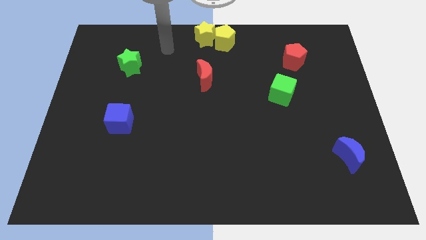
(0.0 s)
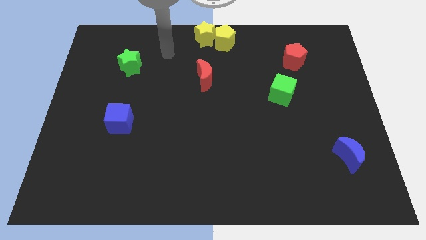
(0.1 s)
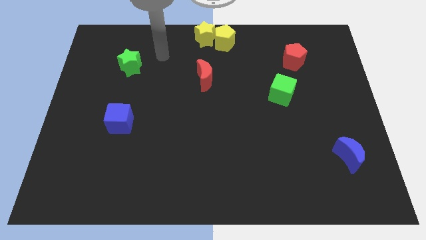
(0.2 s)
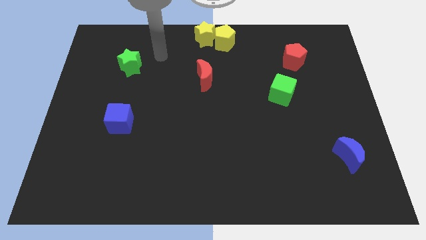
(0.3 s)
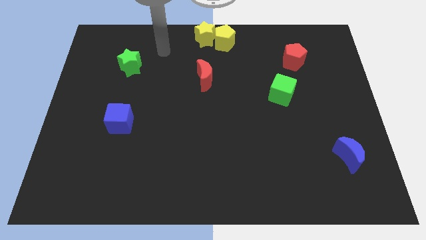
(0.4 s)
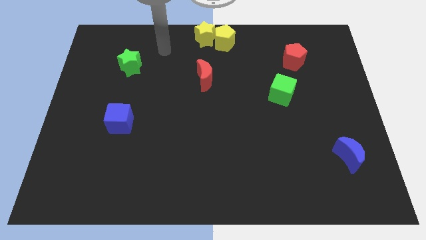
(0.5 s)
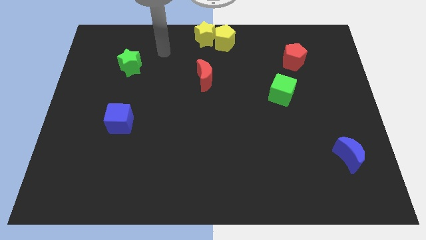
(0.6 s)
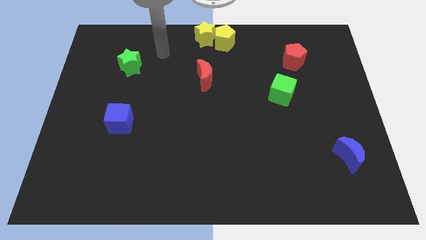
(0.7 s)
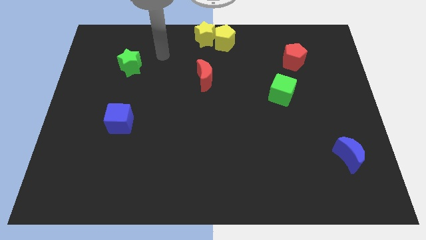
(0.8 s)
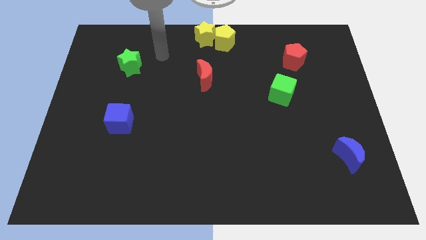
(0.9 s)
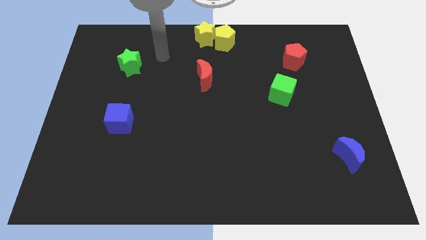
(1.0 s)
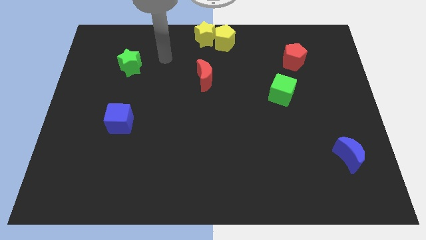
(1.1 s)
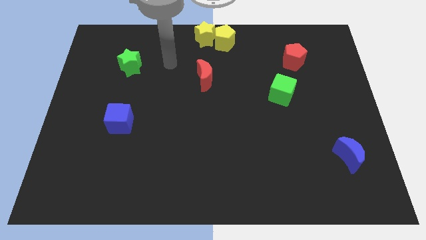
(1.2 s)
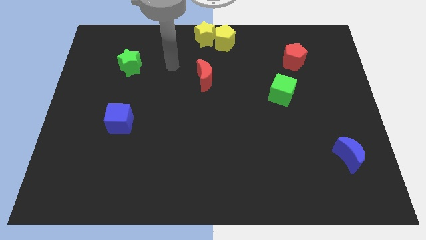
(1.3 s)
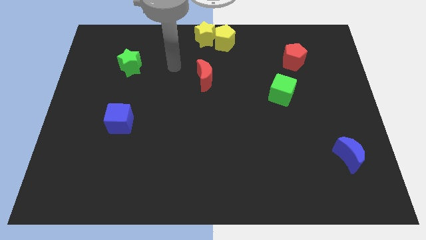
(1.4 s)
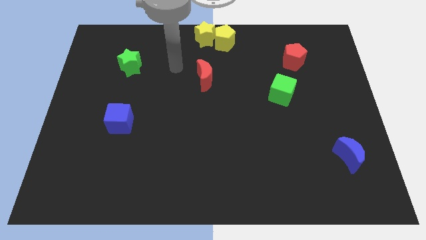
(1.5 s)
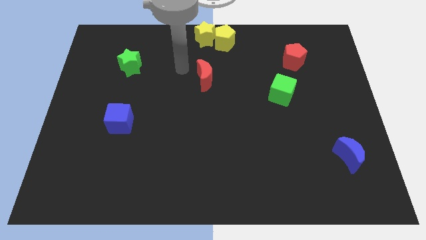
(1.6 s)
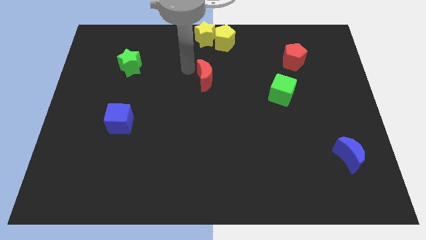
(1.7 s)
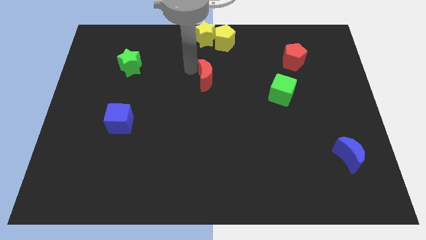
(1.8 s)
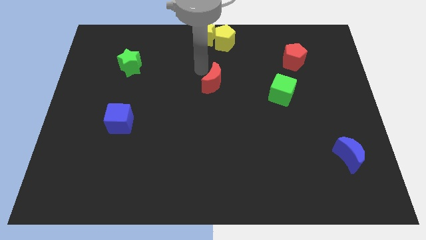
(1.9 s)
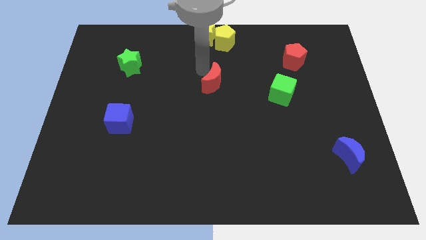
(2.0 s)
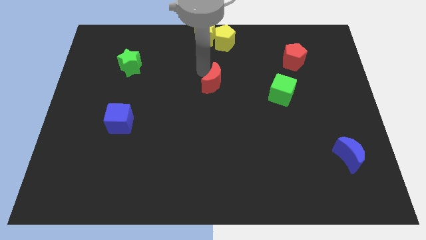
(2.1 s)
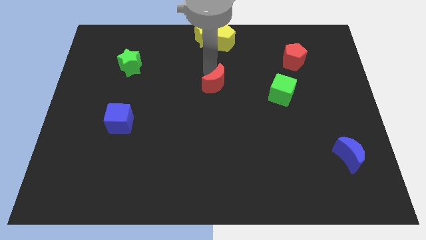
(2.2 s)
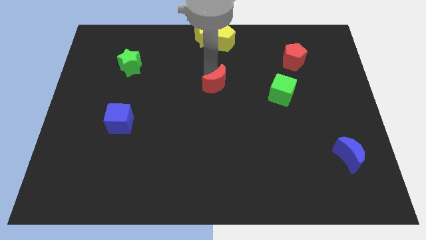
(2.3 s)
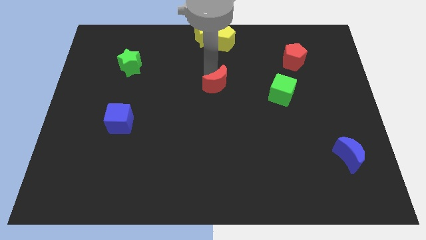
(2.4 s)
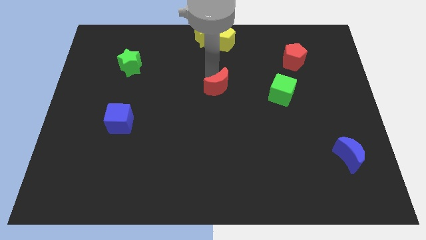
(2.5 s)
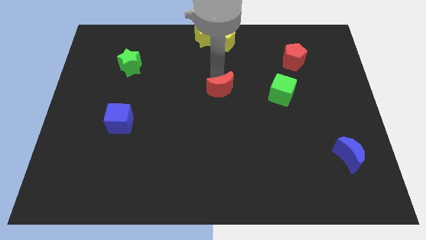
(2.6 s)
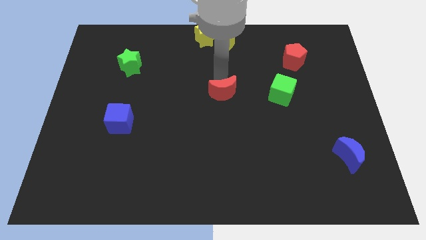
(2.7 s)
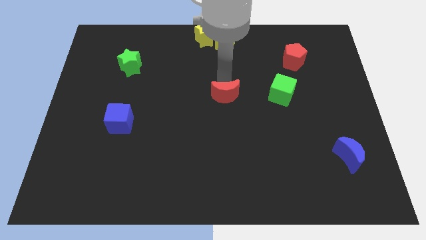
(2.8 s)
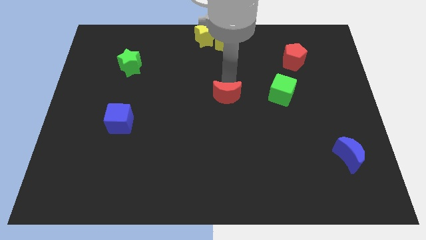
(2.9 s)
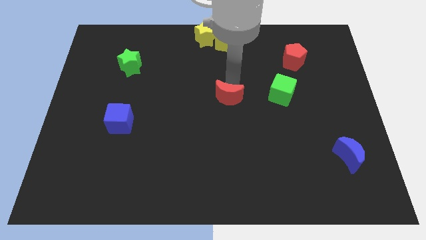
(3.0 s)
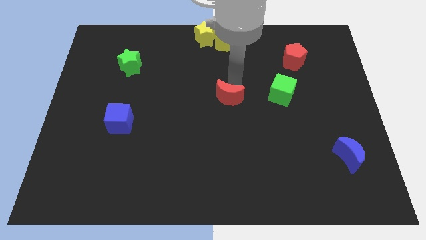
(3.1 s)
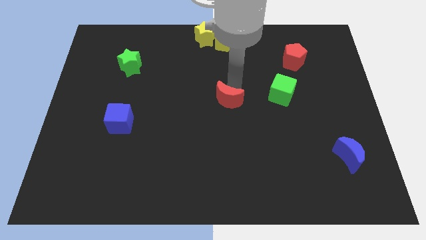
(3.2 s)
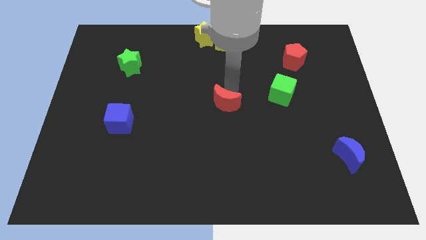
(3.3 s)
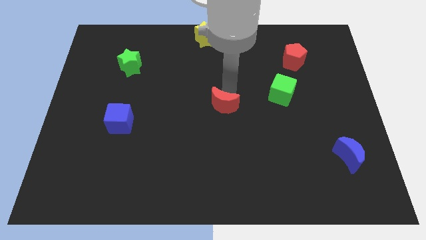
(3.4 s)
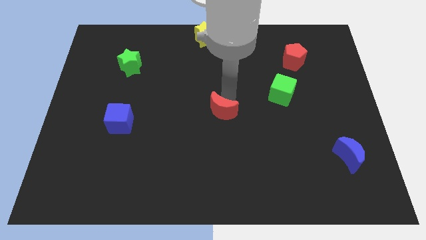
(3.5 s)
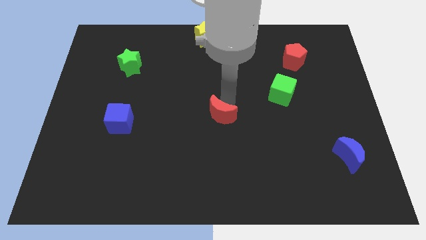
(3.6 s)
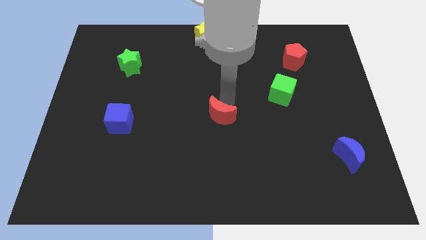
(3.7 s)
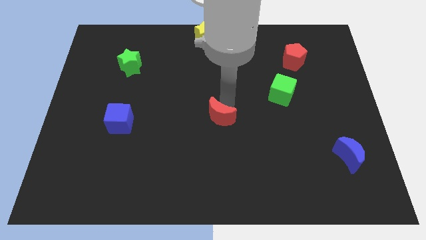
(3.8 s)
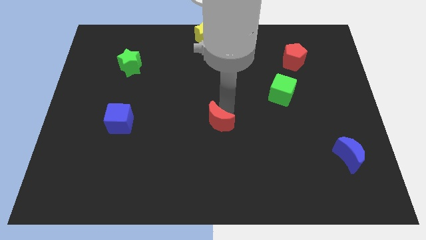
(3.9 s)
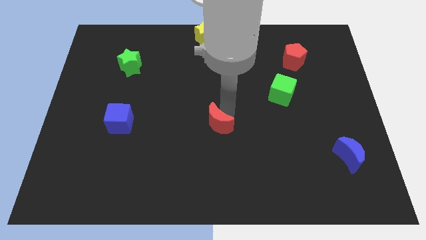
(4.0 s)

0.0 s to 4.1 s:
place the red moon right to the blue cube

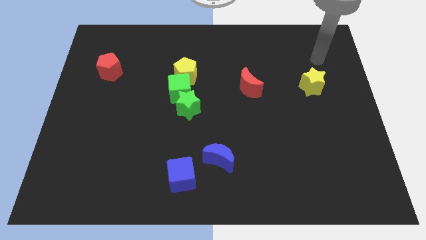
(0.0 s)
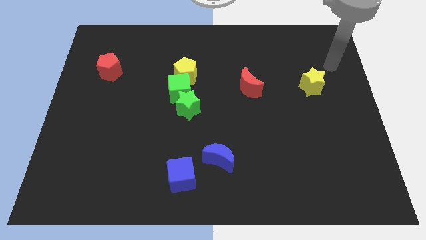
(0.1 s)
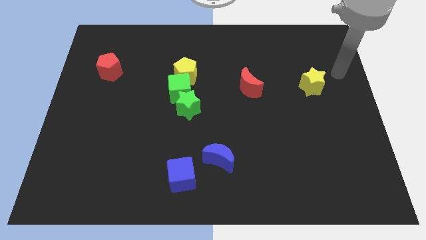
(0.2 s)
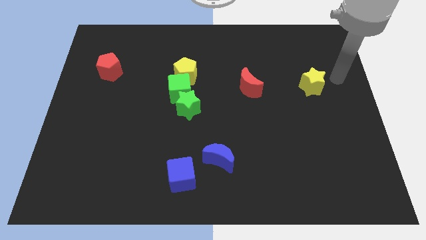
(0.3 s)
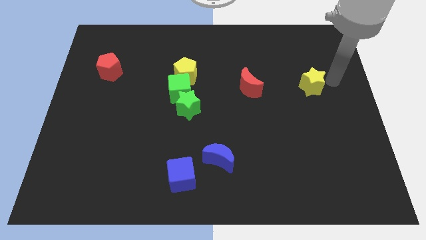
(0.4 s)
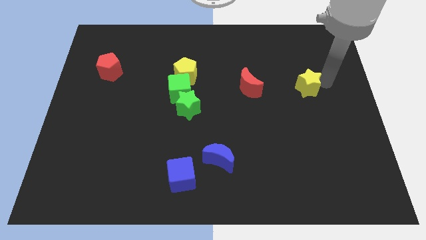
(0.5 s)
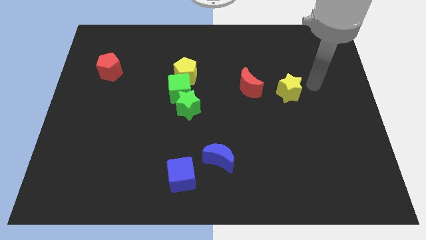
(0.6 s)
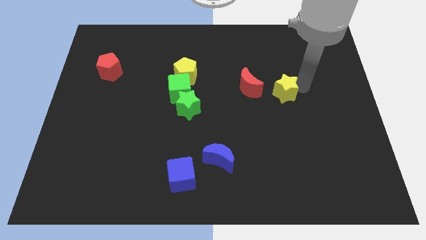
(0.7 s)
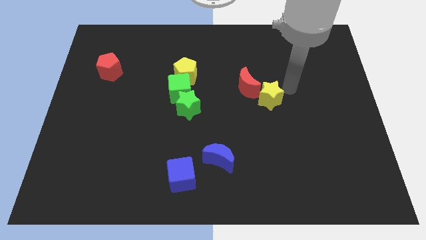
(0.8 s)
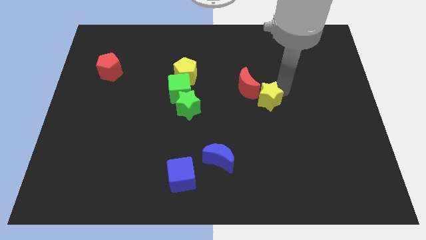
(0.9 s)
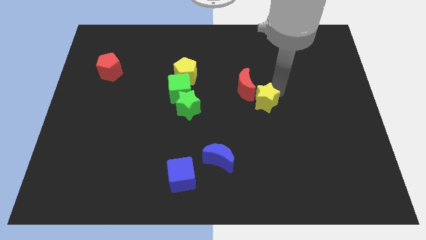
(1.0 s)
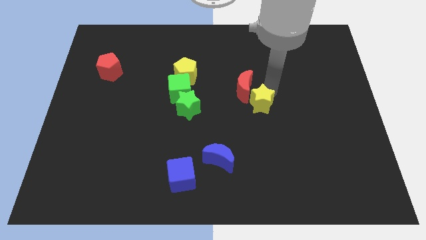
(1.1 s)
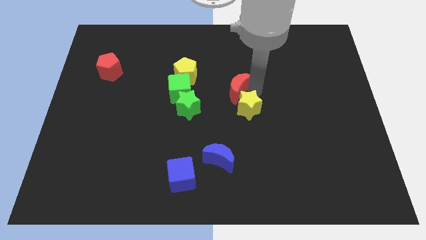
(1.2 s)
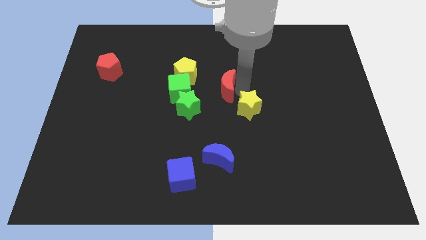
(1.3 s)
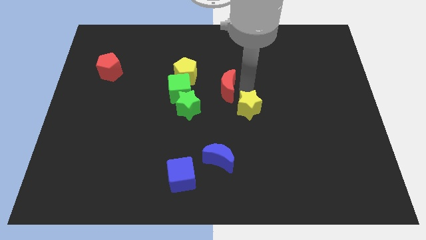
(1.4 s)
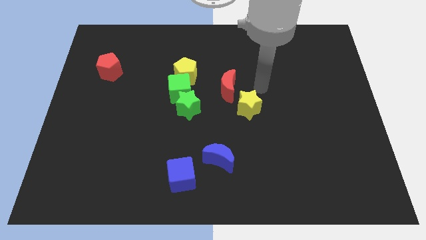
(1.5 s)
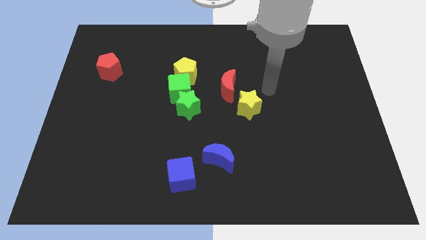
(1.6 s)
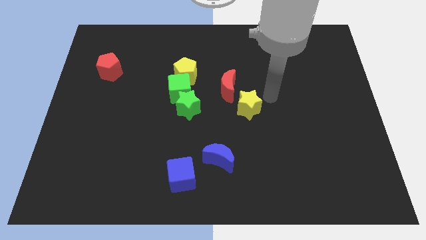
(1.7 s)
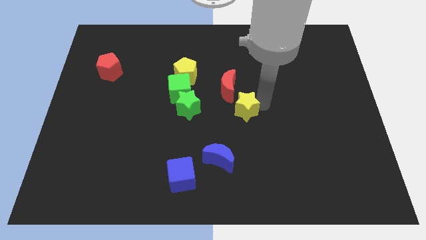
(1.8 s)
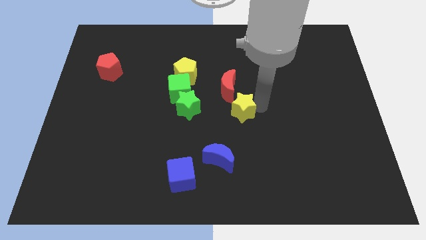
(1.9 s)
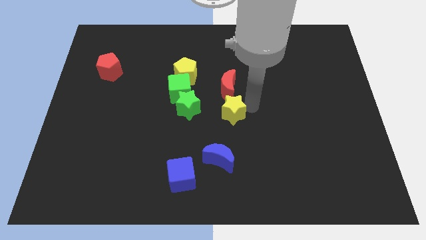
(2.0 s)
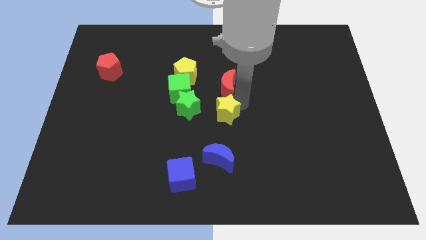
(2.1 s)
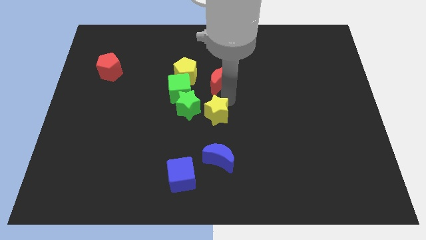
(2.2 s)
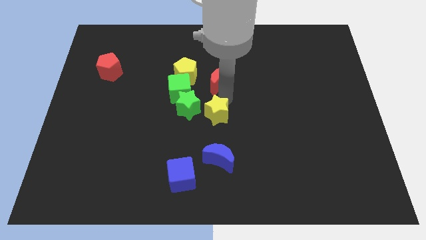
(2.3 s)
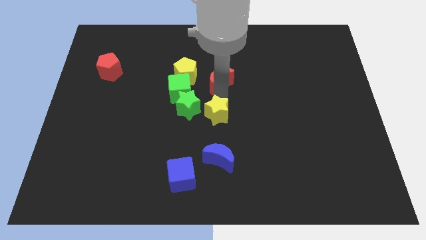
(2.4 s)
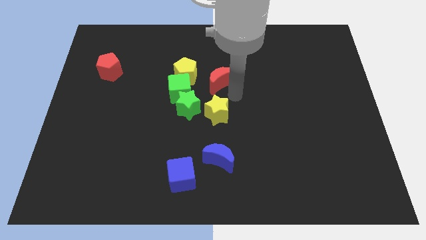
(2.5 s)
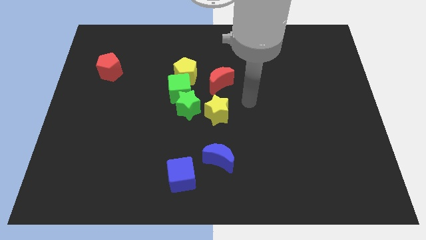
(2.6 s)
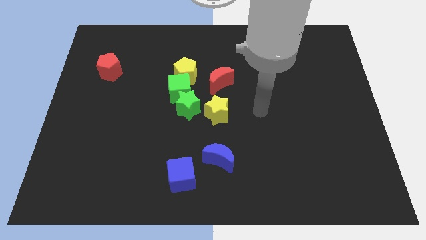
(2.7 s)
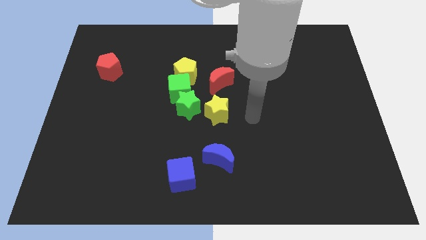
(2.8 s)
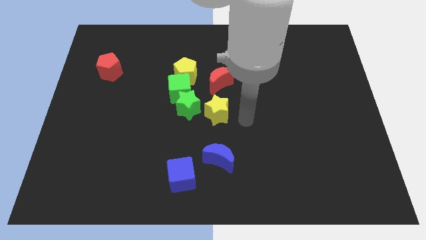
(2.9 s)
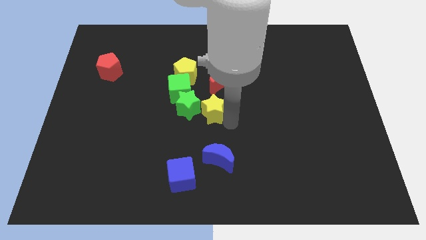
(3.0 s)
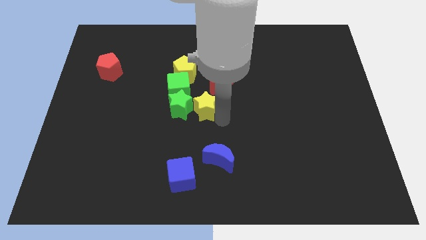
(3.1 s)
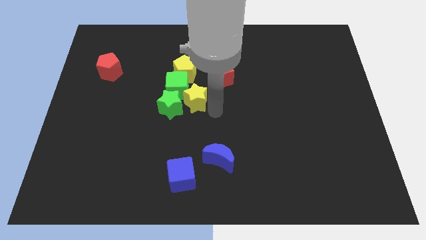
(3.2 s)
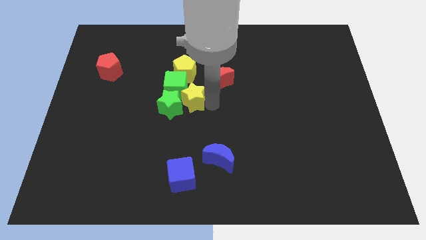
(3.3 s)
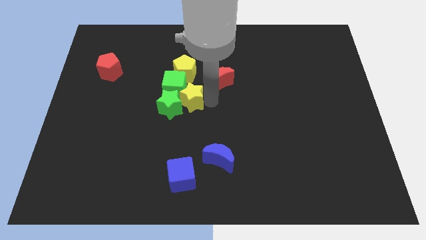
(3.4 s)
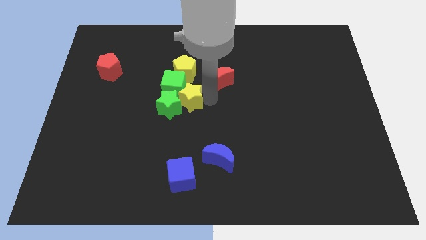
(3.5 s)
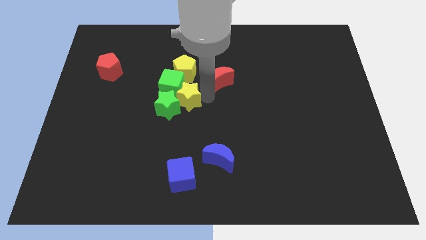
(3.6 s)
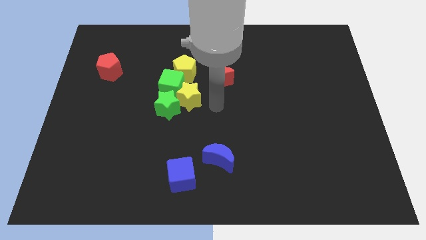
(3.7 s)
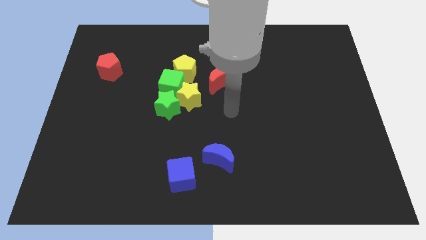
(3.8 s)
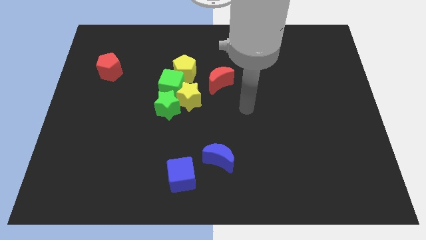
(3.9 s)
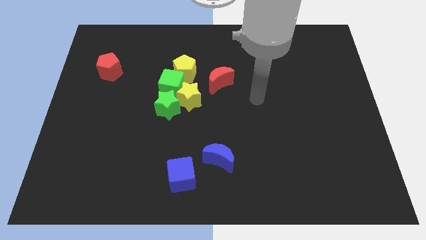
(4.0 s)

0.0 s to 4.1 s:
push yellow star into green cube

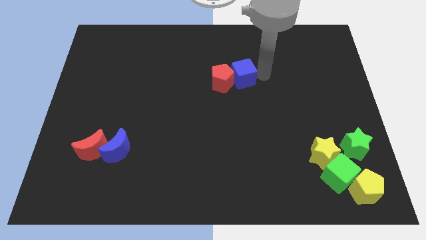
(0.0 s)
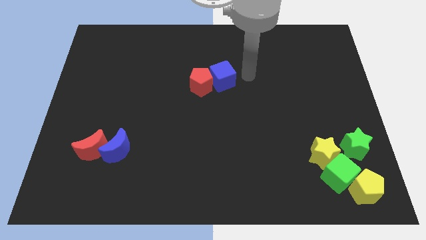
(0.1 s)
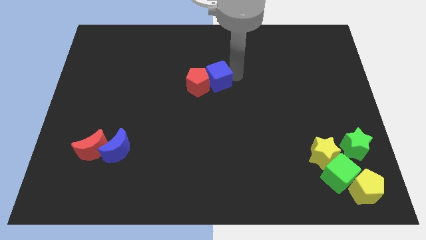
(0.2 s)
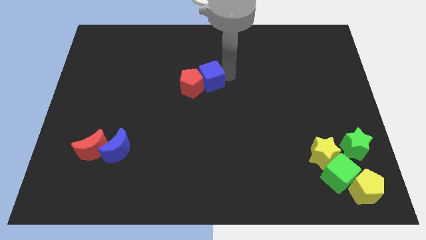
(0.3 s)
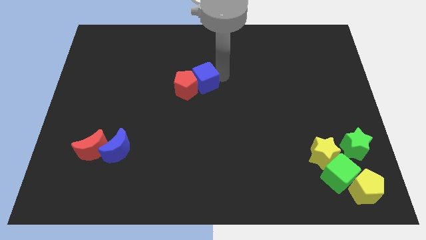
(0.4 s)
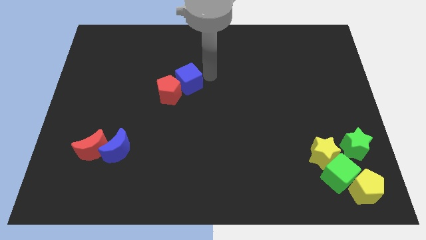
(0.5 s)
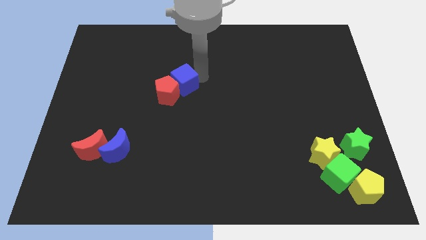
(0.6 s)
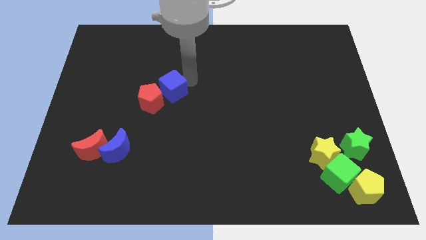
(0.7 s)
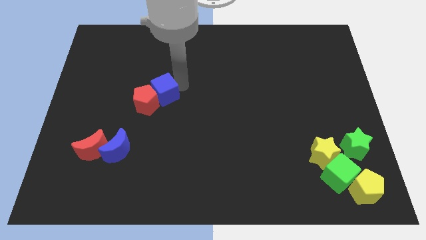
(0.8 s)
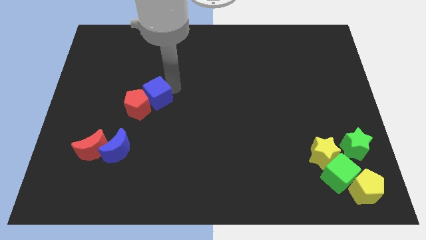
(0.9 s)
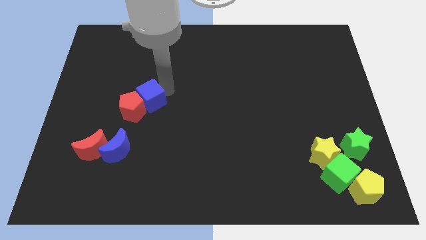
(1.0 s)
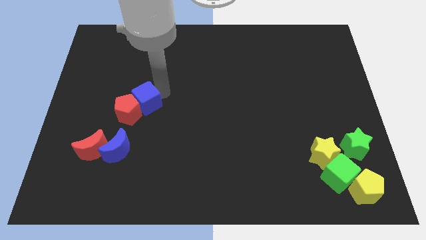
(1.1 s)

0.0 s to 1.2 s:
move the red pentagon and blue cube towards the red moon
